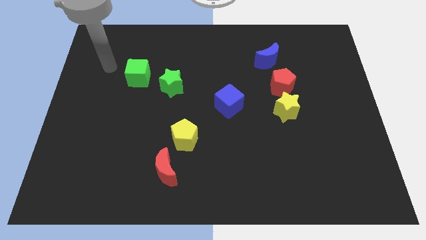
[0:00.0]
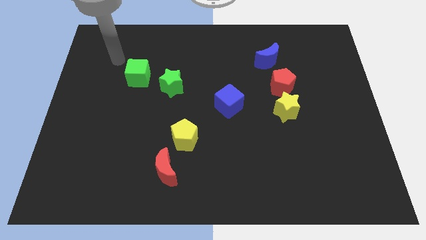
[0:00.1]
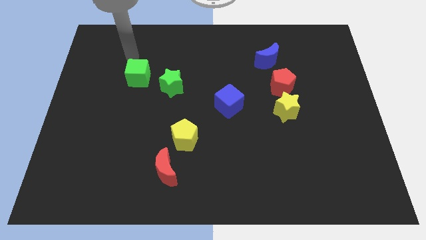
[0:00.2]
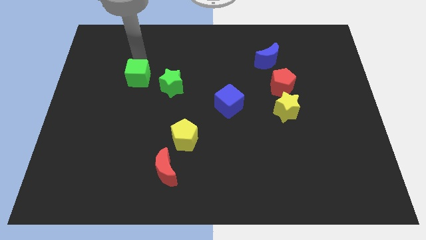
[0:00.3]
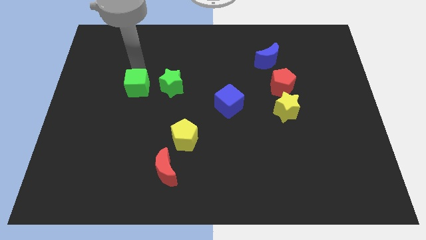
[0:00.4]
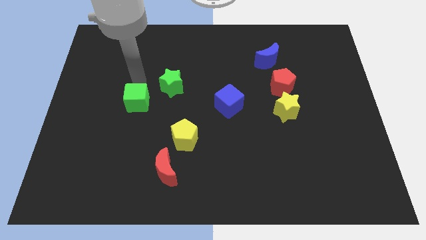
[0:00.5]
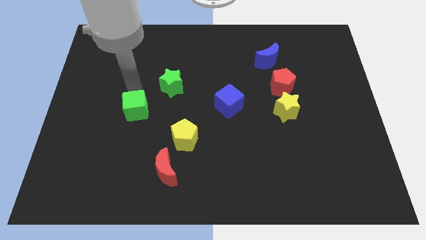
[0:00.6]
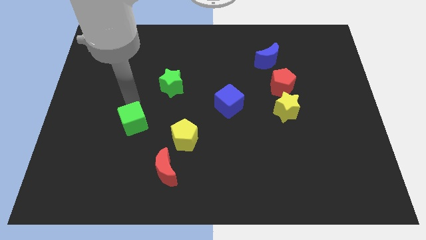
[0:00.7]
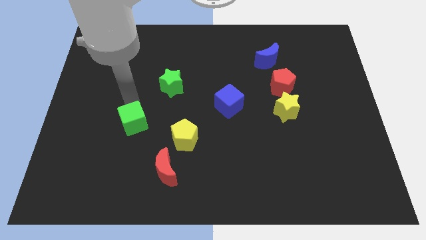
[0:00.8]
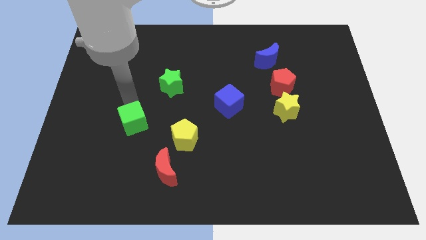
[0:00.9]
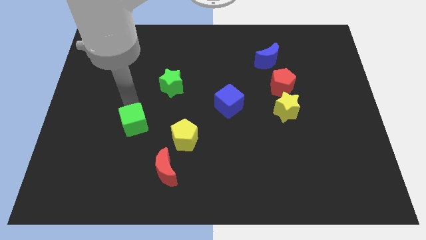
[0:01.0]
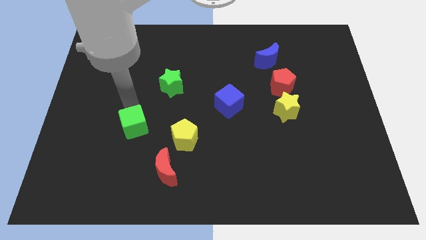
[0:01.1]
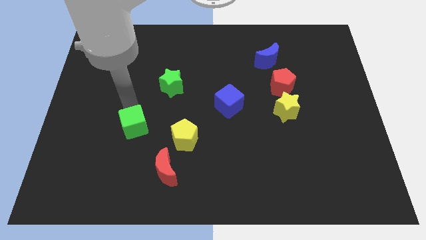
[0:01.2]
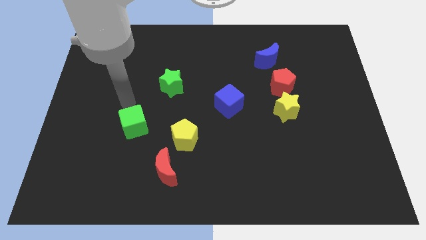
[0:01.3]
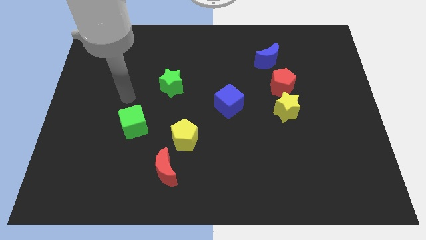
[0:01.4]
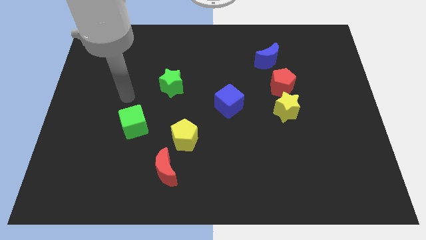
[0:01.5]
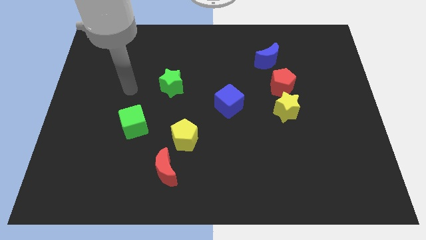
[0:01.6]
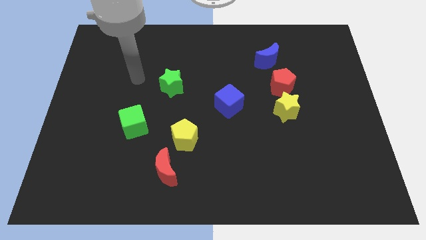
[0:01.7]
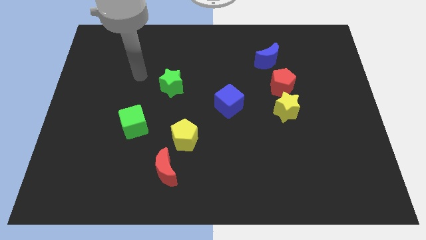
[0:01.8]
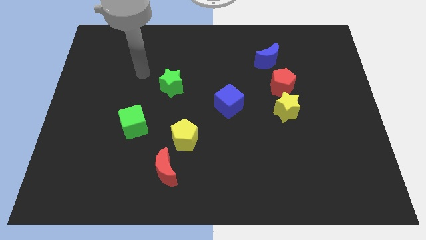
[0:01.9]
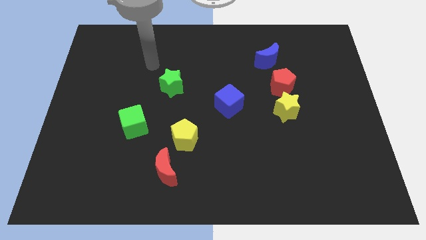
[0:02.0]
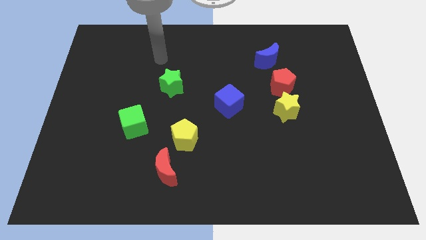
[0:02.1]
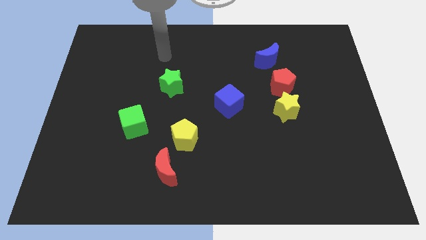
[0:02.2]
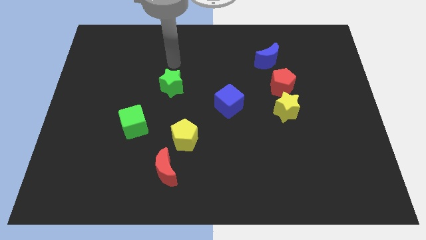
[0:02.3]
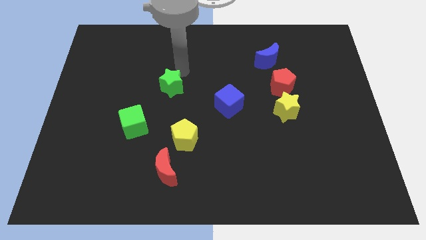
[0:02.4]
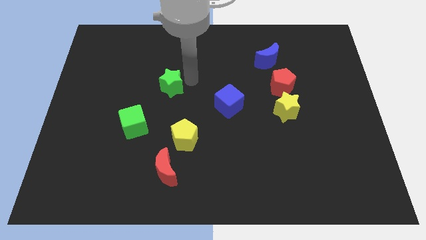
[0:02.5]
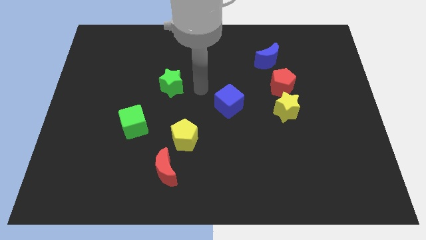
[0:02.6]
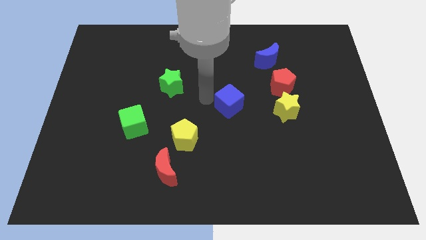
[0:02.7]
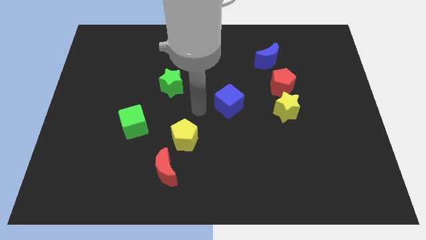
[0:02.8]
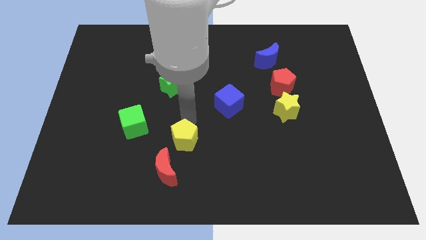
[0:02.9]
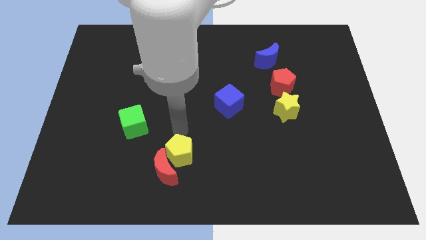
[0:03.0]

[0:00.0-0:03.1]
push the green cube towards the bottom side of the board

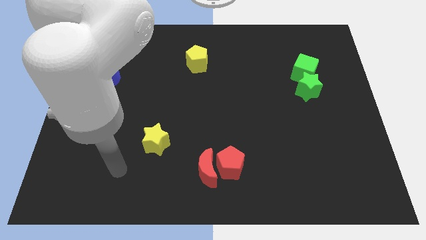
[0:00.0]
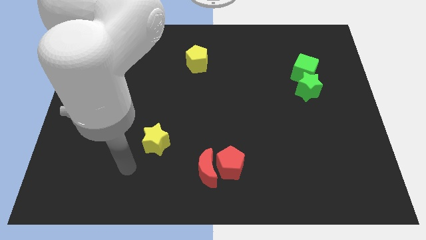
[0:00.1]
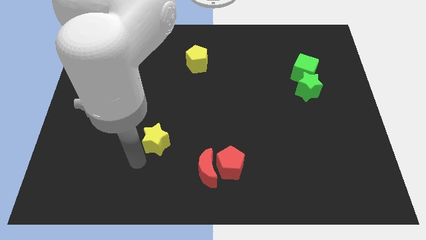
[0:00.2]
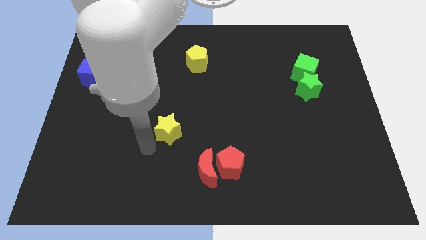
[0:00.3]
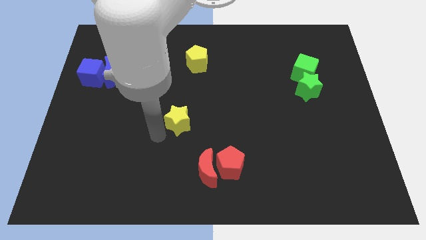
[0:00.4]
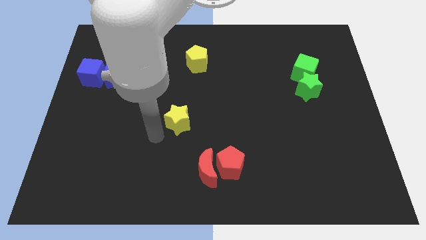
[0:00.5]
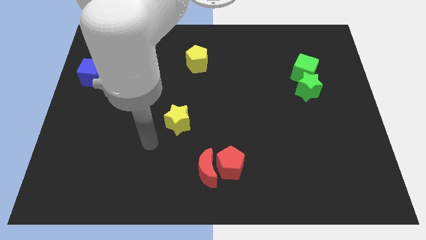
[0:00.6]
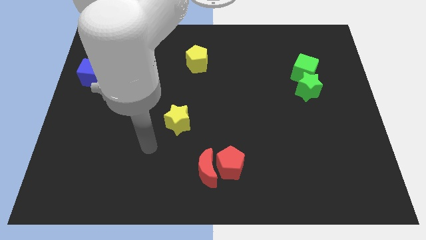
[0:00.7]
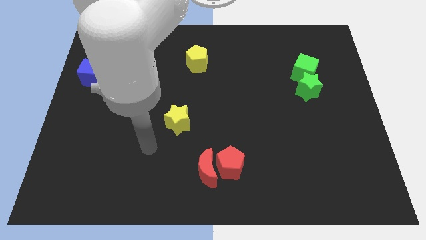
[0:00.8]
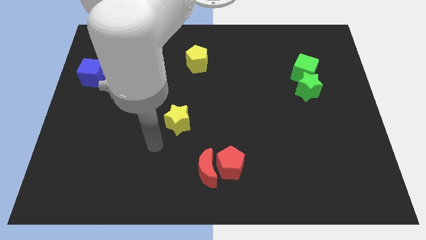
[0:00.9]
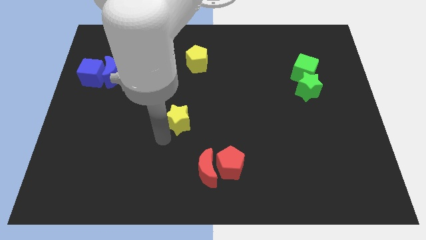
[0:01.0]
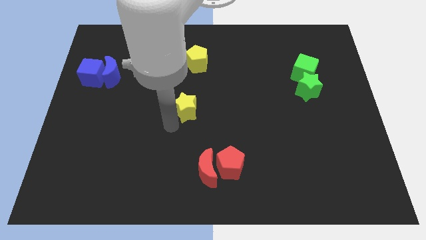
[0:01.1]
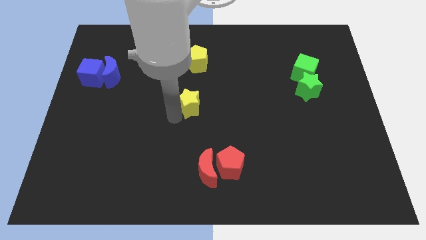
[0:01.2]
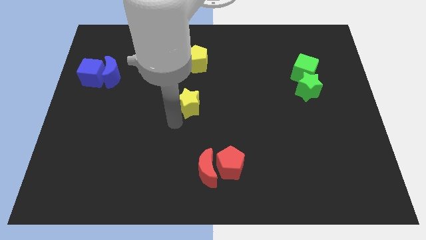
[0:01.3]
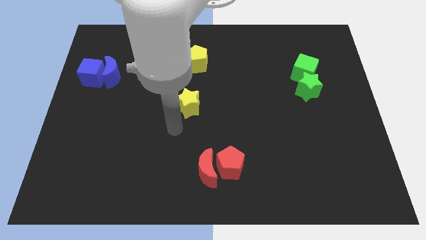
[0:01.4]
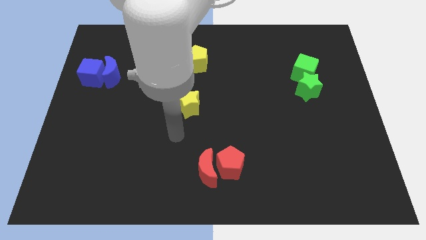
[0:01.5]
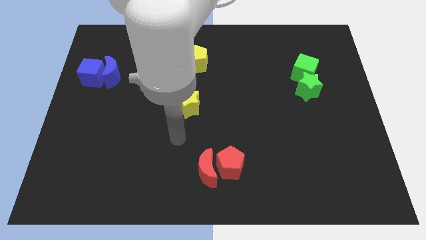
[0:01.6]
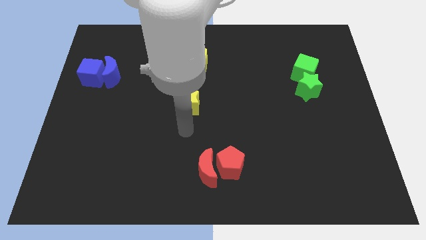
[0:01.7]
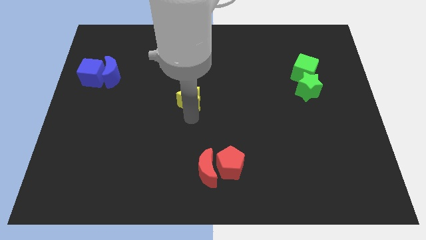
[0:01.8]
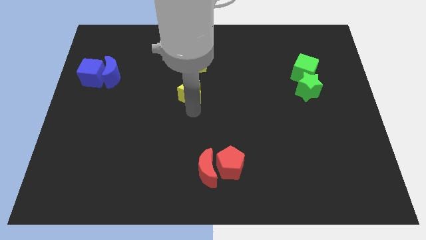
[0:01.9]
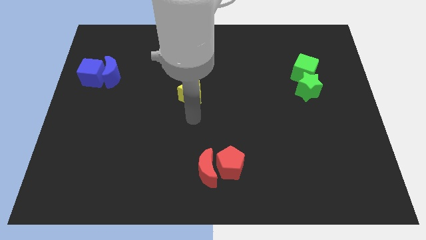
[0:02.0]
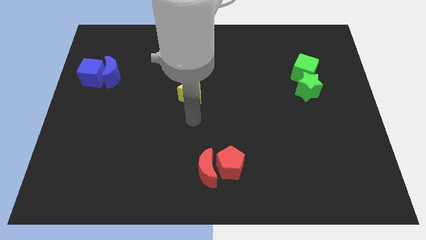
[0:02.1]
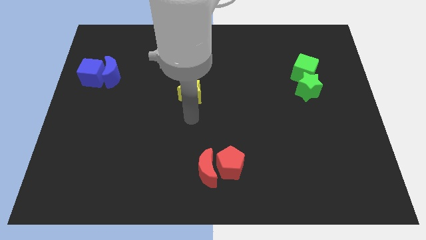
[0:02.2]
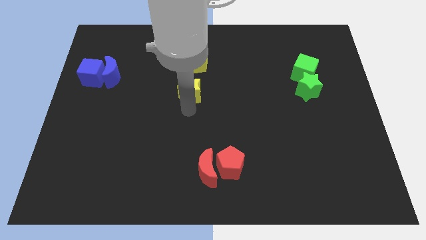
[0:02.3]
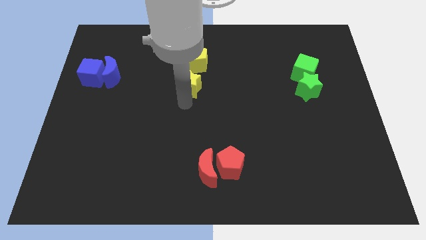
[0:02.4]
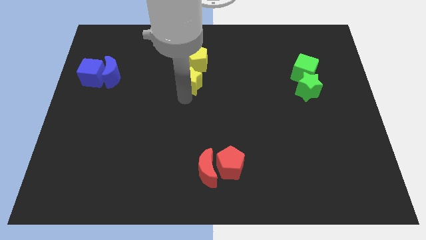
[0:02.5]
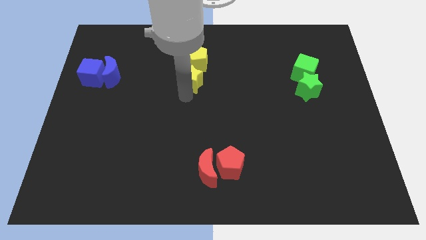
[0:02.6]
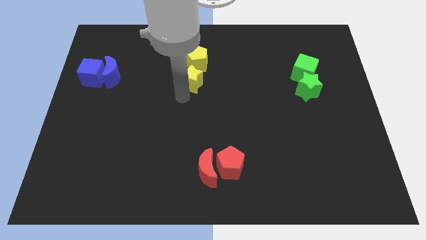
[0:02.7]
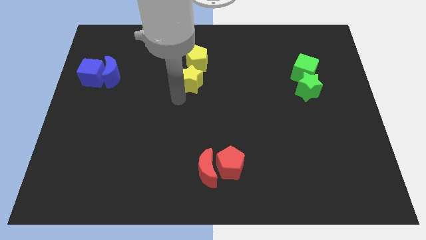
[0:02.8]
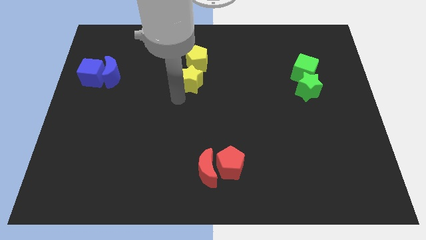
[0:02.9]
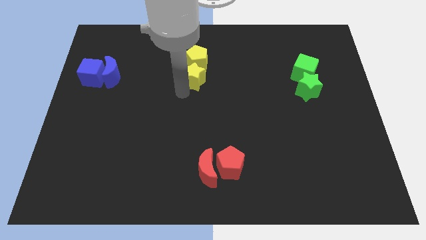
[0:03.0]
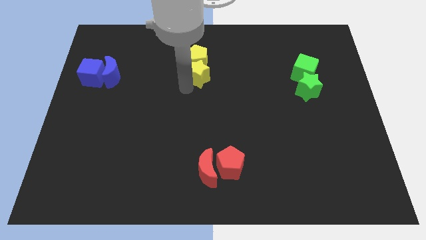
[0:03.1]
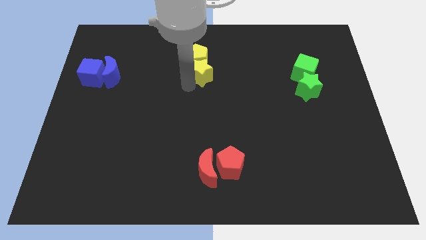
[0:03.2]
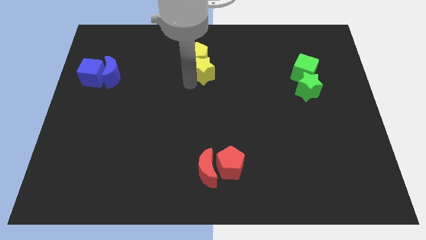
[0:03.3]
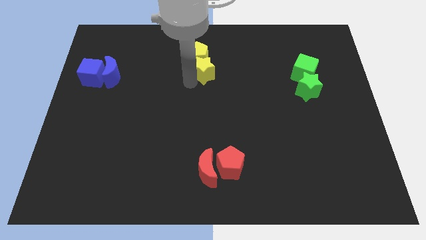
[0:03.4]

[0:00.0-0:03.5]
push the yellow star into the yellow pentagon

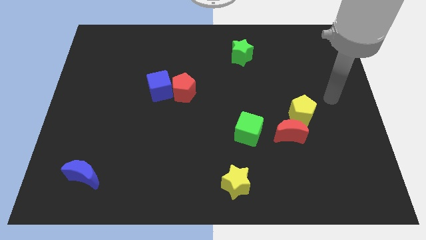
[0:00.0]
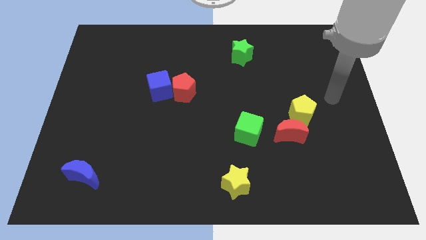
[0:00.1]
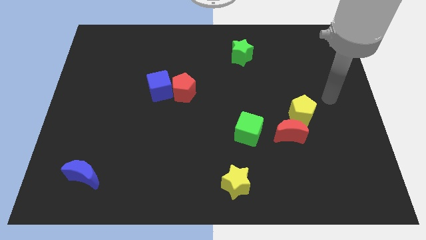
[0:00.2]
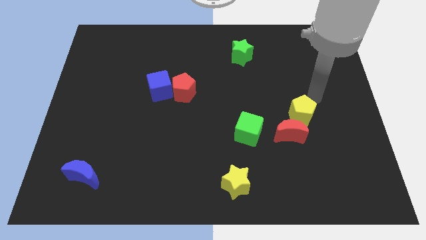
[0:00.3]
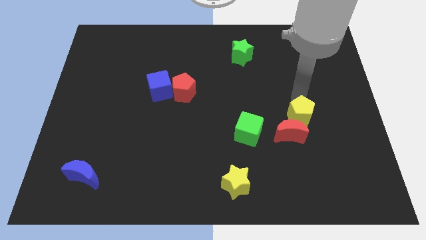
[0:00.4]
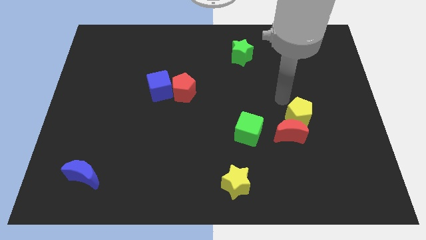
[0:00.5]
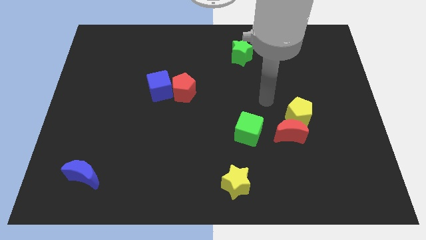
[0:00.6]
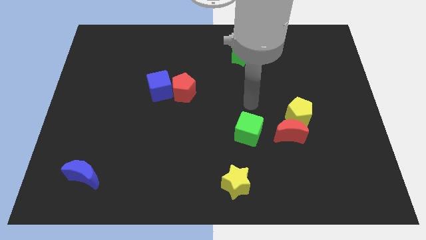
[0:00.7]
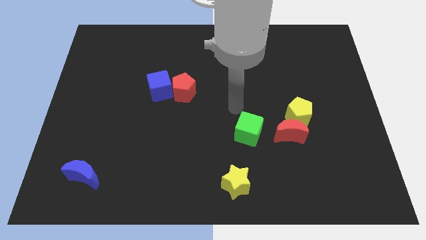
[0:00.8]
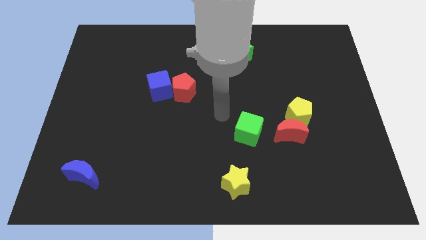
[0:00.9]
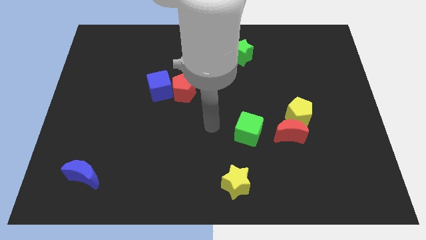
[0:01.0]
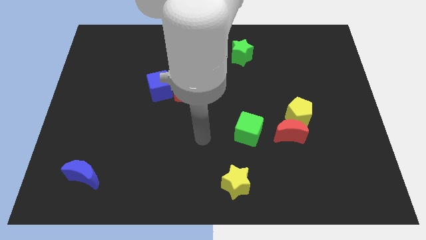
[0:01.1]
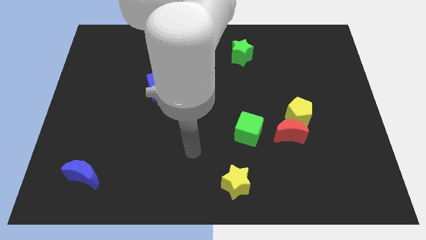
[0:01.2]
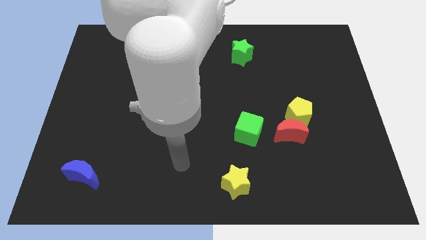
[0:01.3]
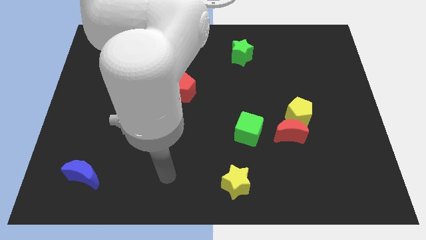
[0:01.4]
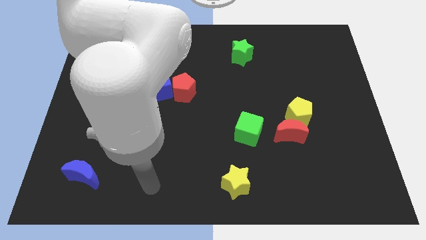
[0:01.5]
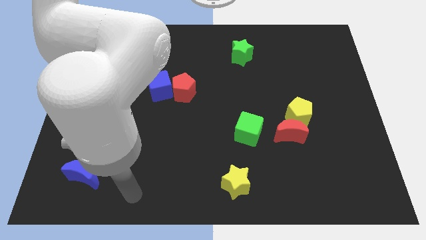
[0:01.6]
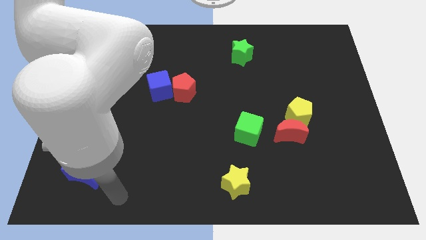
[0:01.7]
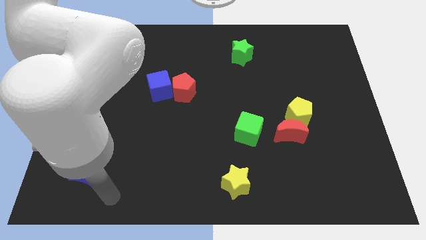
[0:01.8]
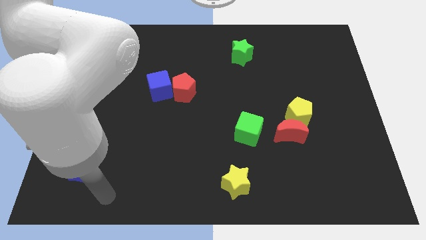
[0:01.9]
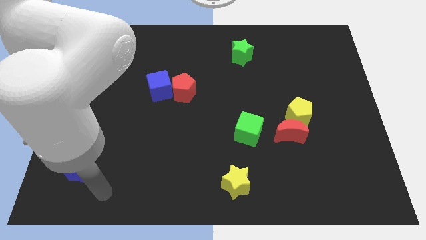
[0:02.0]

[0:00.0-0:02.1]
place your arm to the right of blue moon

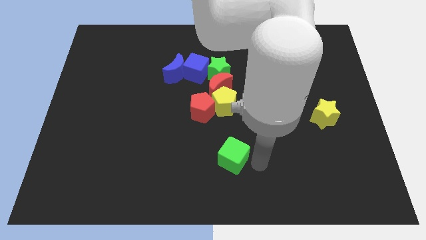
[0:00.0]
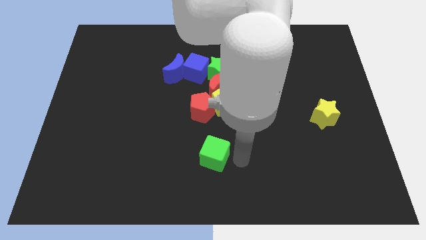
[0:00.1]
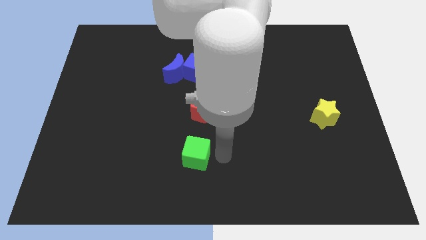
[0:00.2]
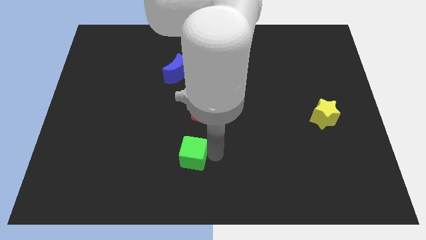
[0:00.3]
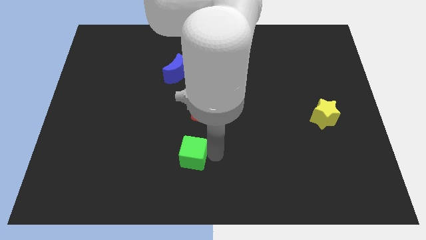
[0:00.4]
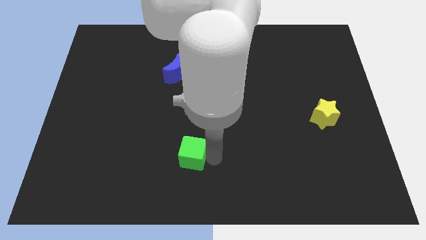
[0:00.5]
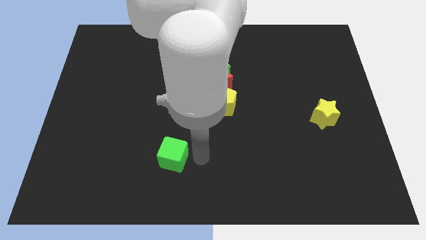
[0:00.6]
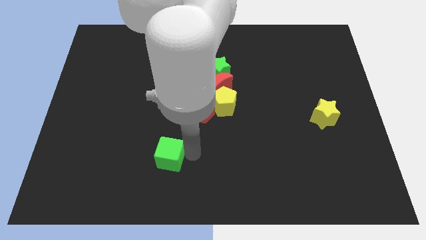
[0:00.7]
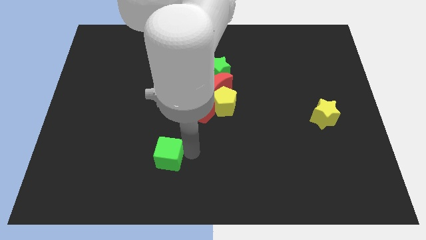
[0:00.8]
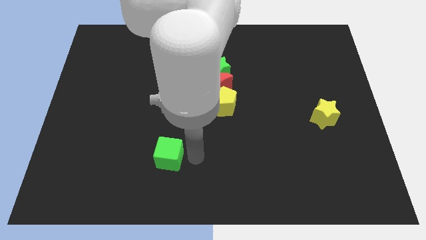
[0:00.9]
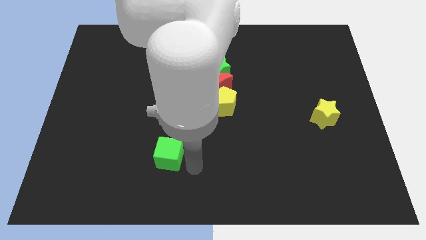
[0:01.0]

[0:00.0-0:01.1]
push the green cube towards left
